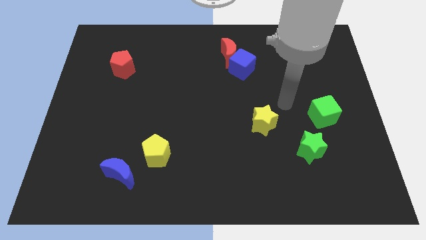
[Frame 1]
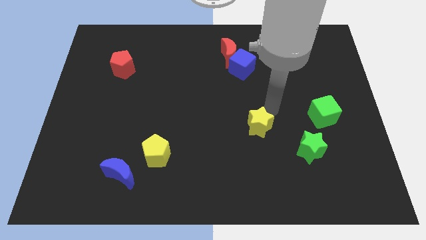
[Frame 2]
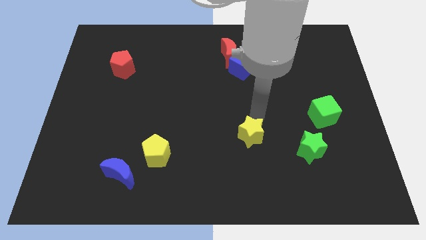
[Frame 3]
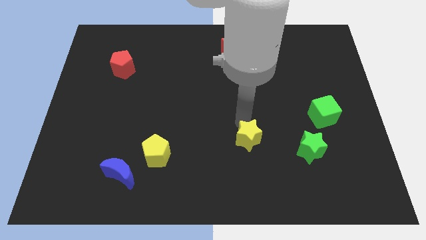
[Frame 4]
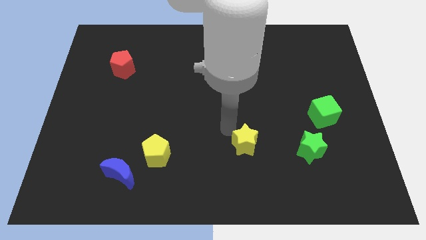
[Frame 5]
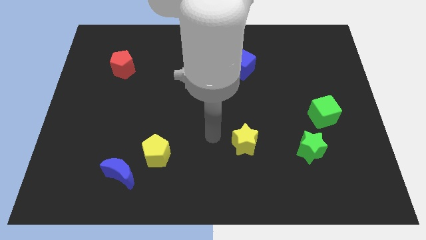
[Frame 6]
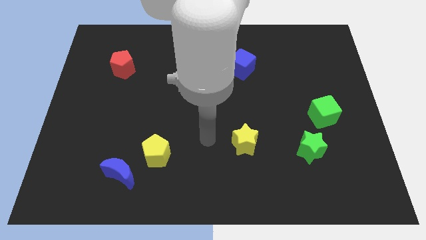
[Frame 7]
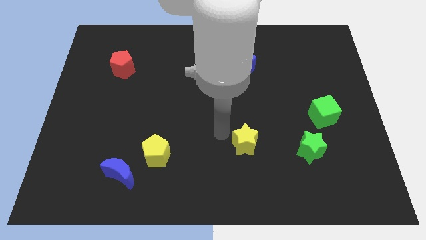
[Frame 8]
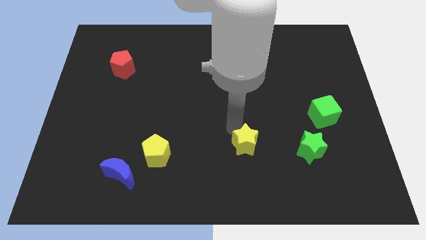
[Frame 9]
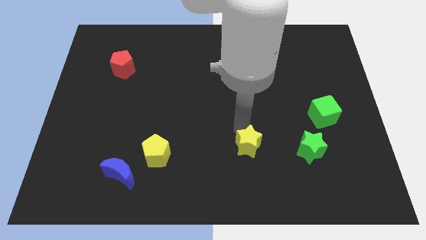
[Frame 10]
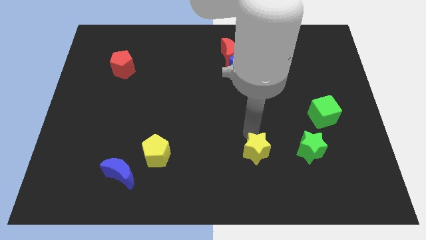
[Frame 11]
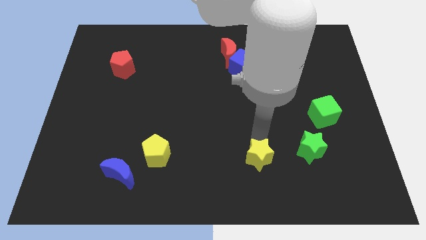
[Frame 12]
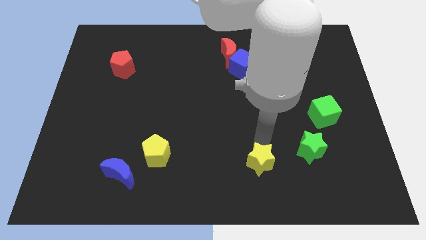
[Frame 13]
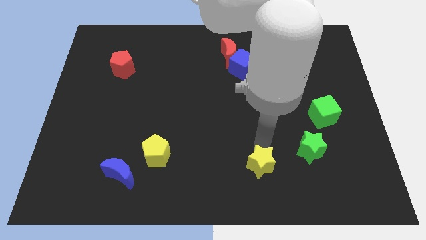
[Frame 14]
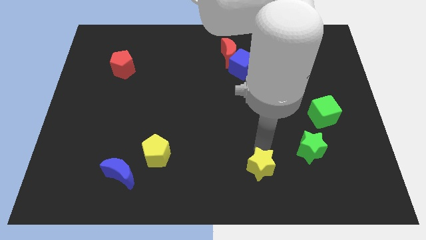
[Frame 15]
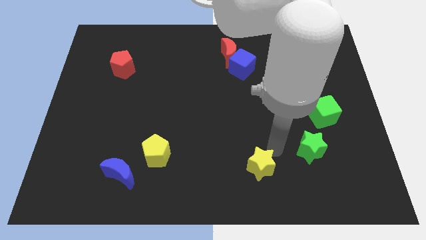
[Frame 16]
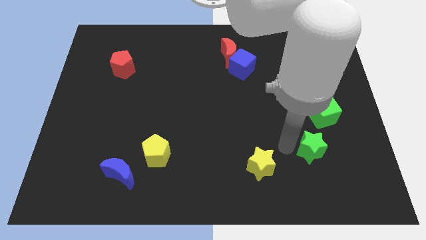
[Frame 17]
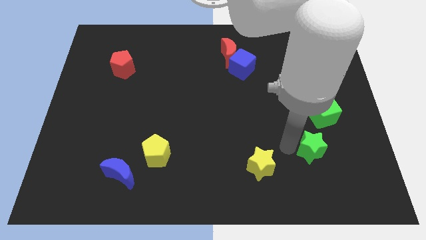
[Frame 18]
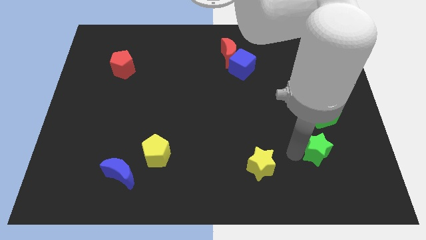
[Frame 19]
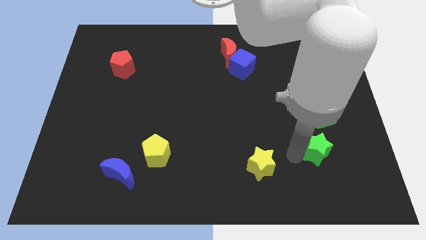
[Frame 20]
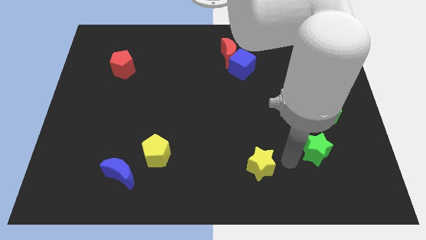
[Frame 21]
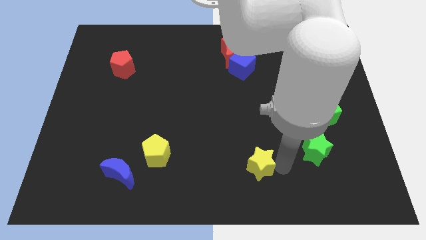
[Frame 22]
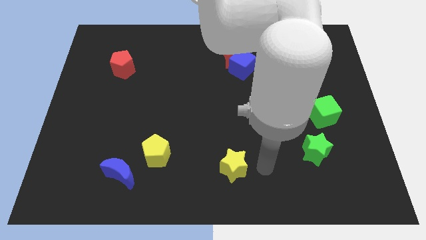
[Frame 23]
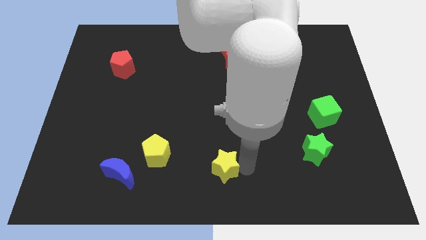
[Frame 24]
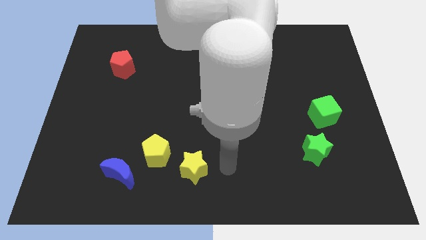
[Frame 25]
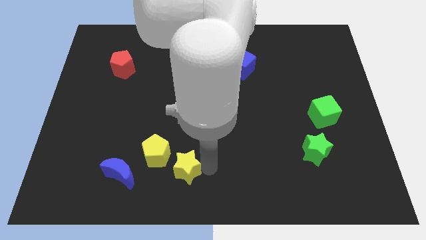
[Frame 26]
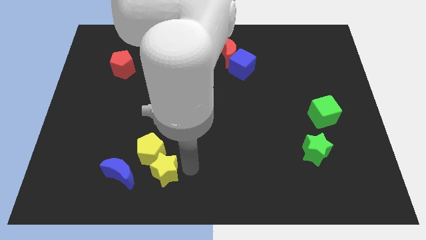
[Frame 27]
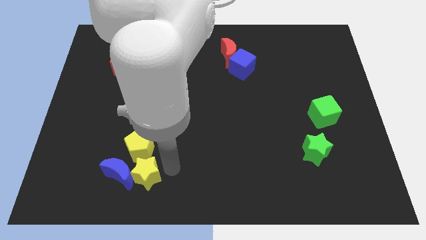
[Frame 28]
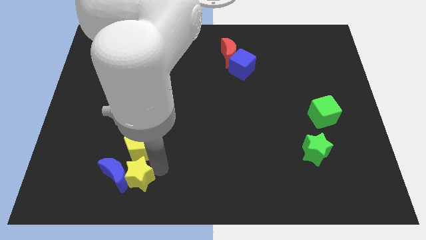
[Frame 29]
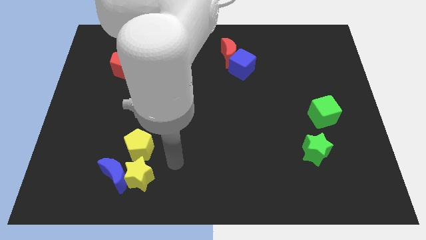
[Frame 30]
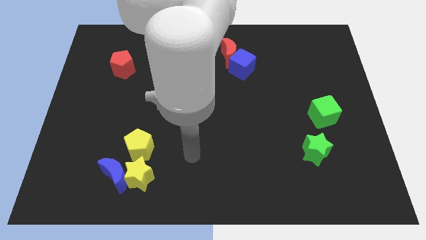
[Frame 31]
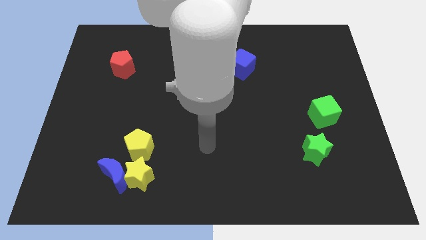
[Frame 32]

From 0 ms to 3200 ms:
move the yellow star to the bottom of the yellow pentagon

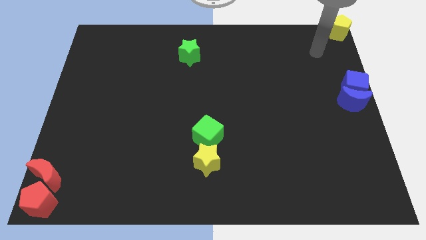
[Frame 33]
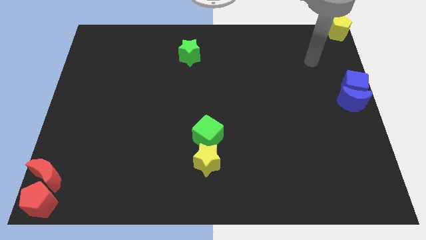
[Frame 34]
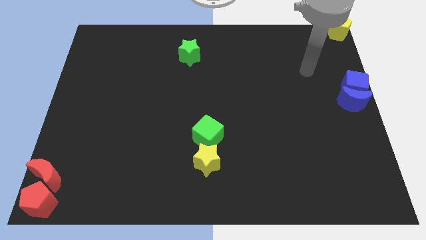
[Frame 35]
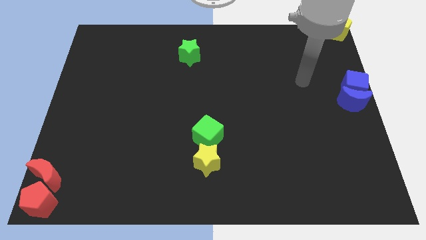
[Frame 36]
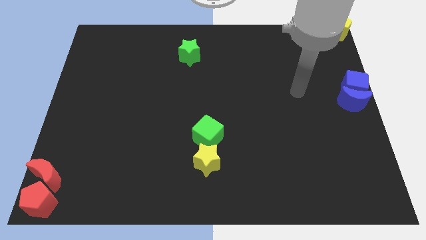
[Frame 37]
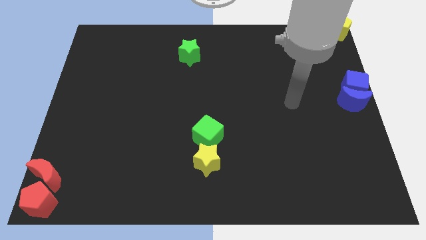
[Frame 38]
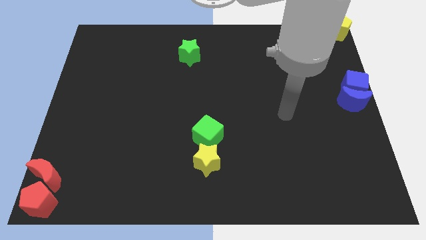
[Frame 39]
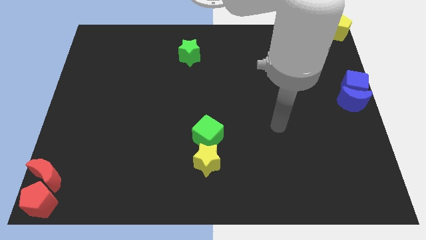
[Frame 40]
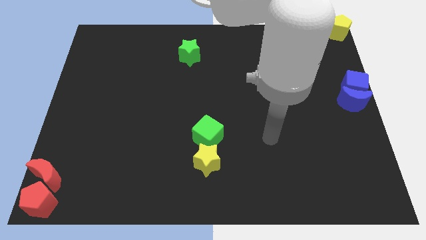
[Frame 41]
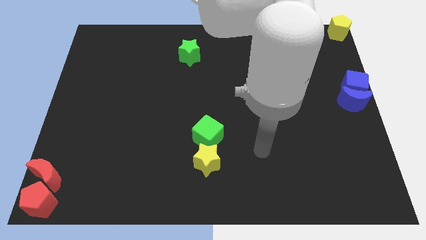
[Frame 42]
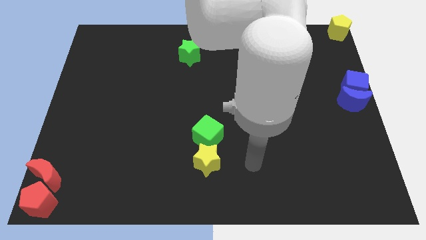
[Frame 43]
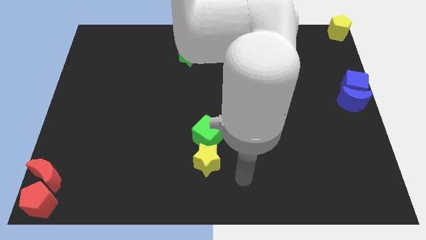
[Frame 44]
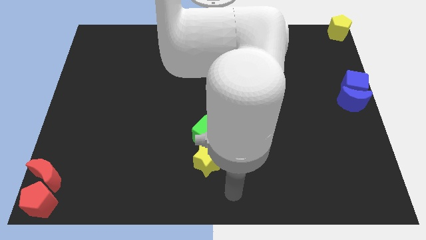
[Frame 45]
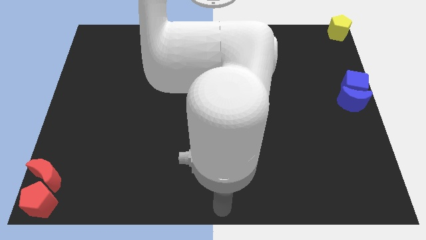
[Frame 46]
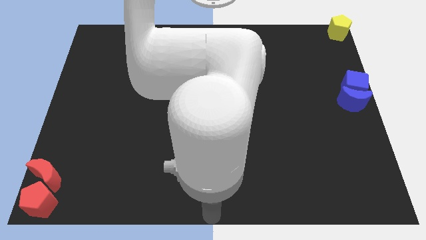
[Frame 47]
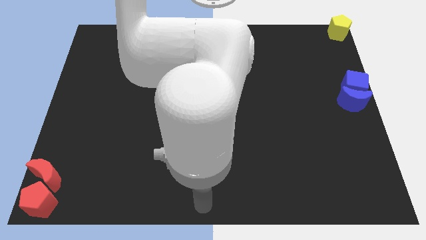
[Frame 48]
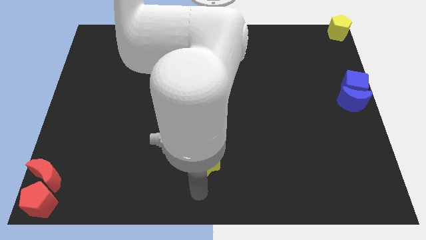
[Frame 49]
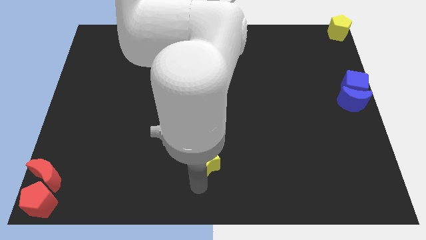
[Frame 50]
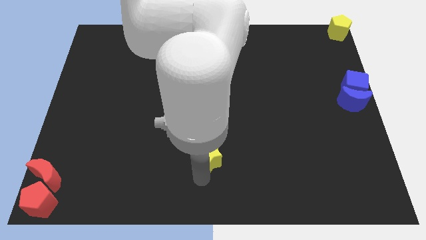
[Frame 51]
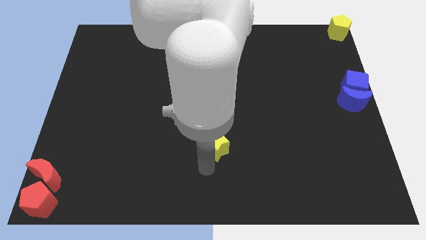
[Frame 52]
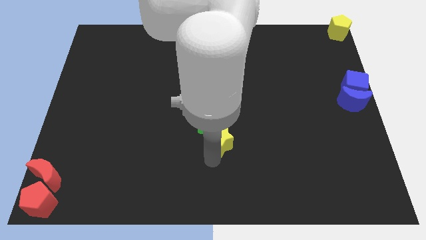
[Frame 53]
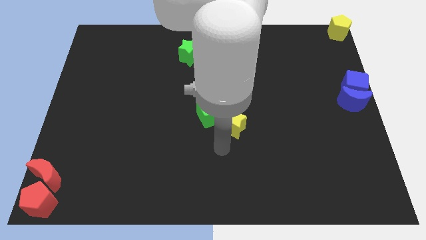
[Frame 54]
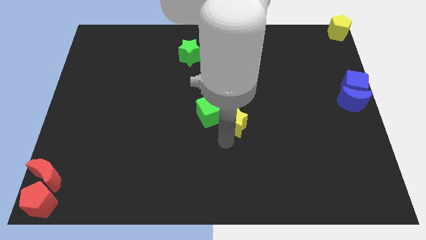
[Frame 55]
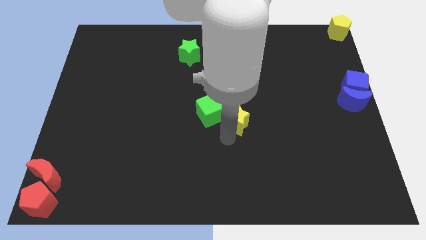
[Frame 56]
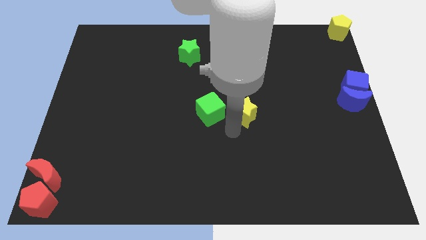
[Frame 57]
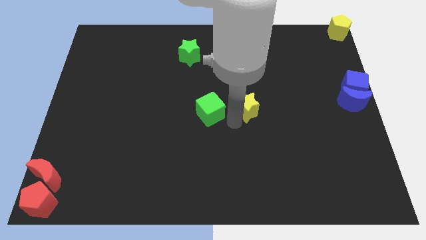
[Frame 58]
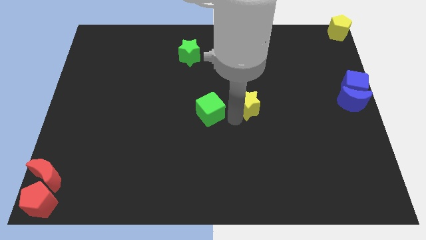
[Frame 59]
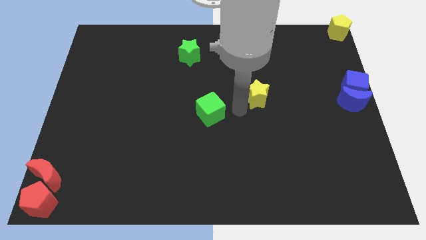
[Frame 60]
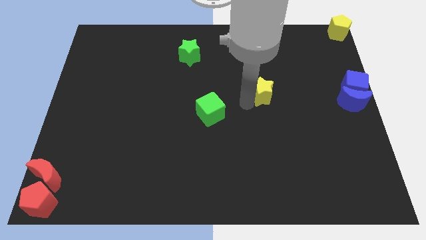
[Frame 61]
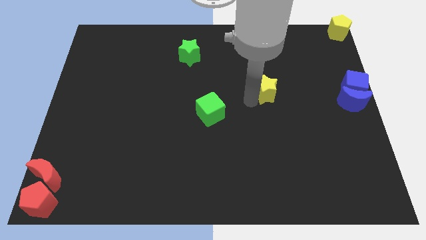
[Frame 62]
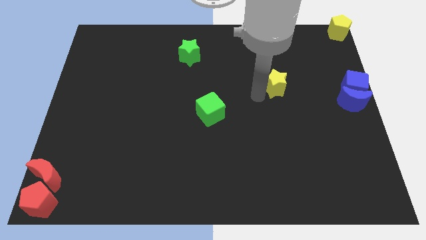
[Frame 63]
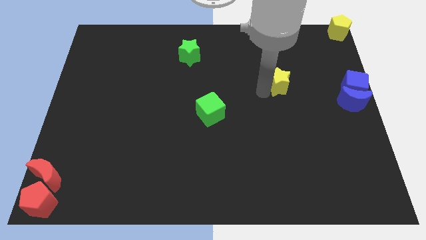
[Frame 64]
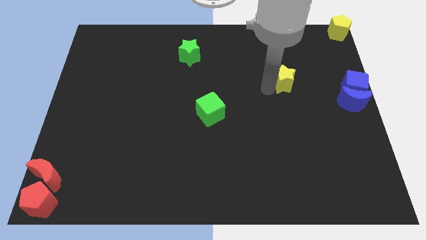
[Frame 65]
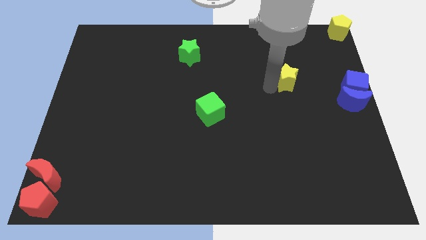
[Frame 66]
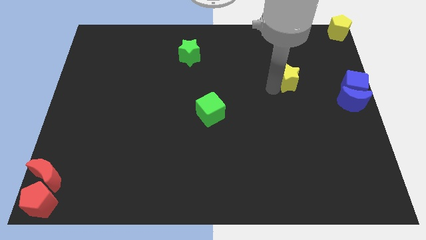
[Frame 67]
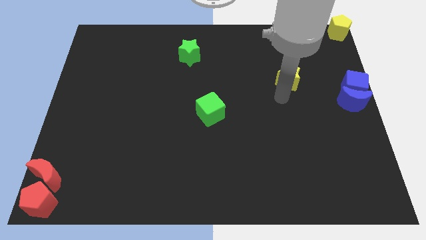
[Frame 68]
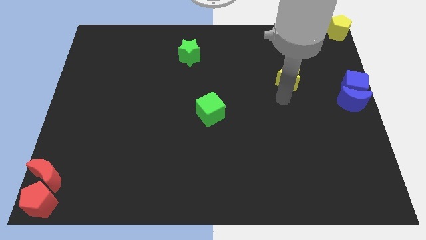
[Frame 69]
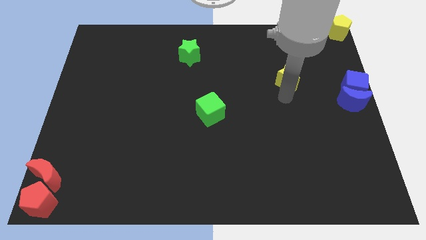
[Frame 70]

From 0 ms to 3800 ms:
separate the green cube and the yellow star

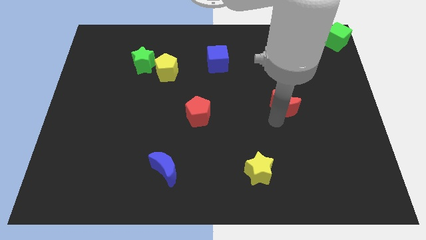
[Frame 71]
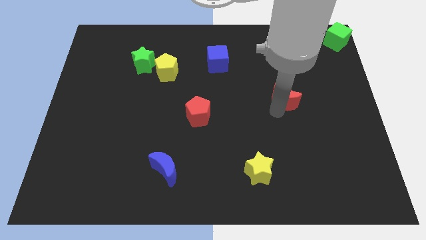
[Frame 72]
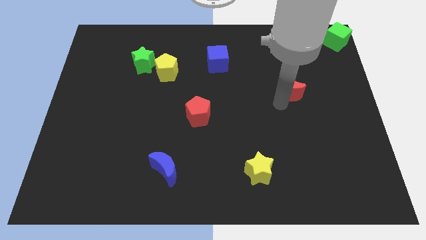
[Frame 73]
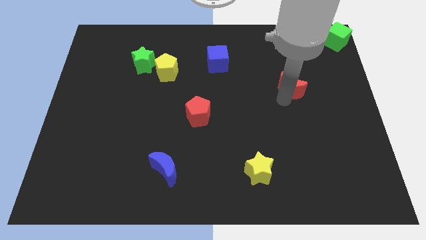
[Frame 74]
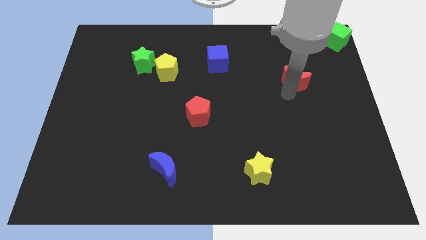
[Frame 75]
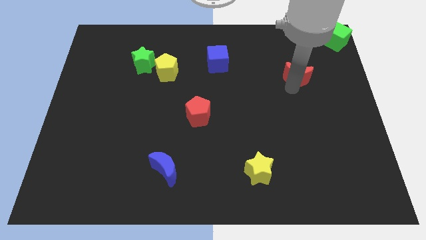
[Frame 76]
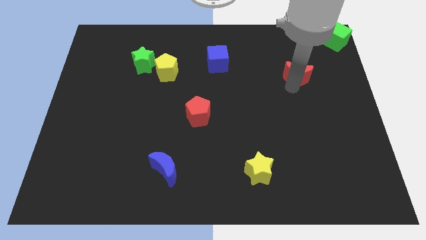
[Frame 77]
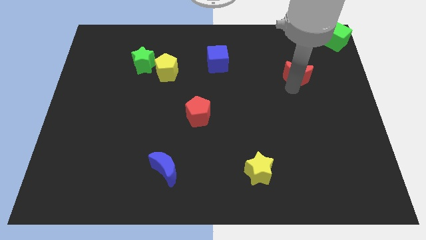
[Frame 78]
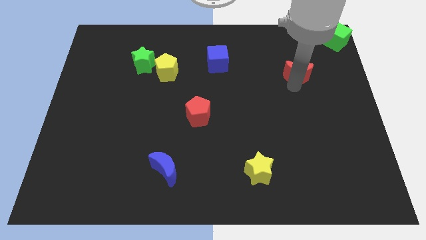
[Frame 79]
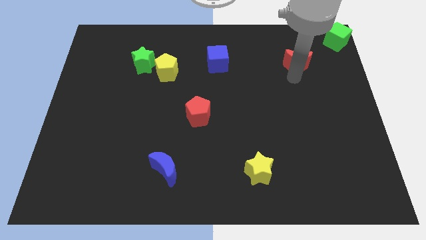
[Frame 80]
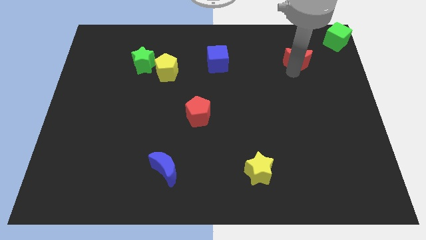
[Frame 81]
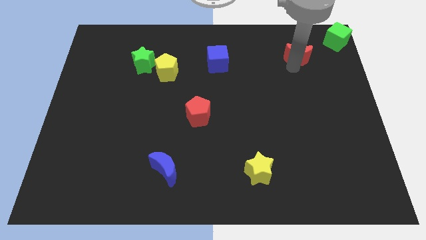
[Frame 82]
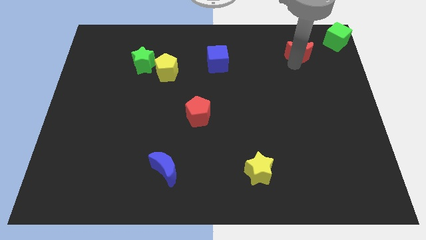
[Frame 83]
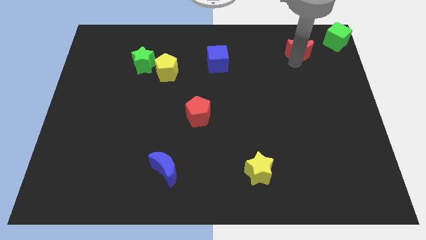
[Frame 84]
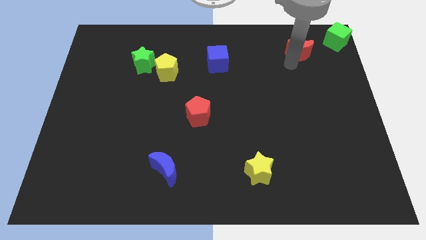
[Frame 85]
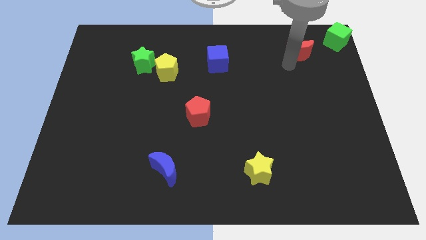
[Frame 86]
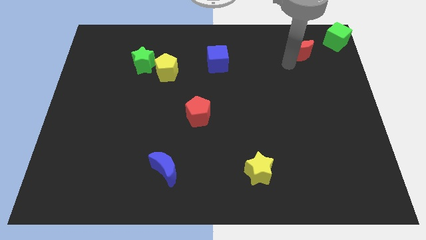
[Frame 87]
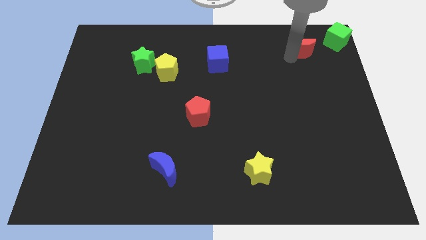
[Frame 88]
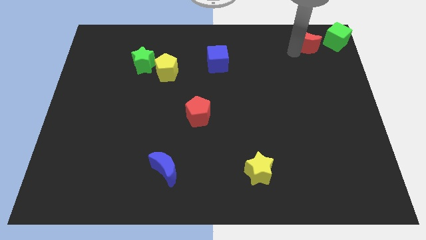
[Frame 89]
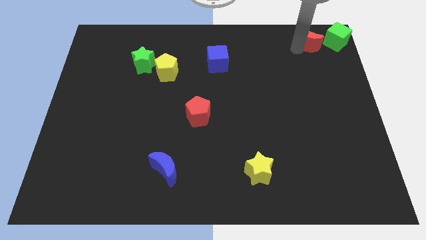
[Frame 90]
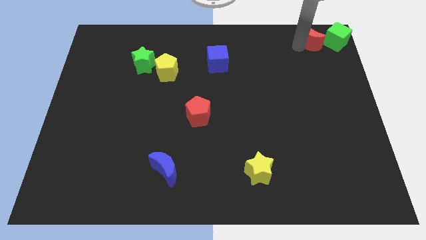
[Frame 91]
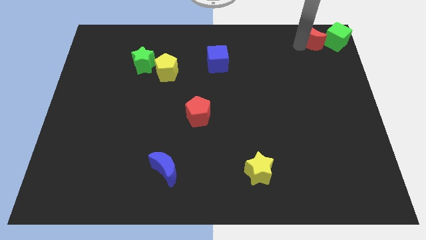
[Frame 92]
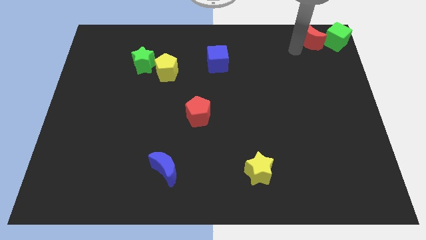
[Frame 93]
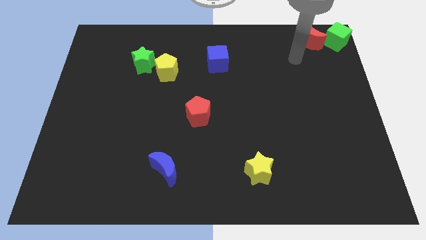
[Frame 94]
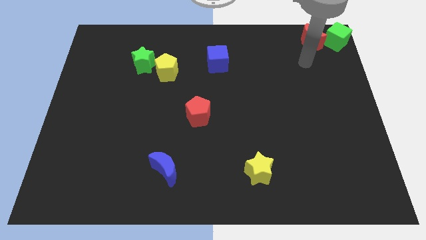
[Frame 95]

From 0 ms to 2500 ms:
push the red crescent to close left of the green cube
